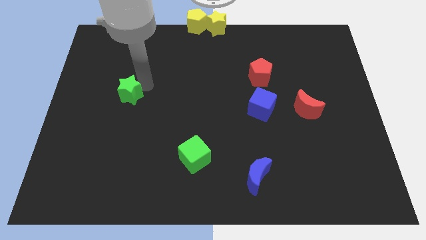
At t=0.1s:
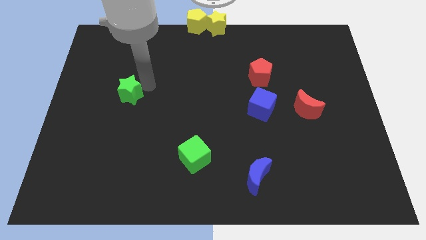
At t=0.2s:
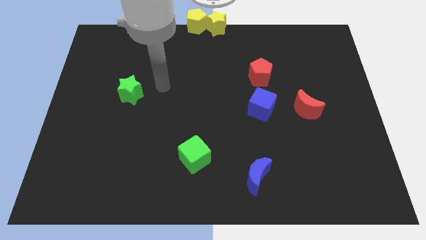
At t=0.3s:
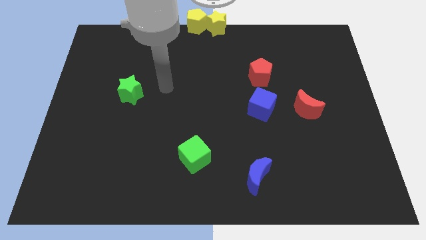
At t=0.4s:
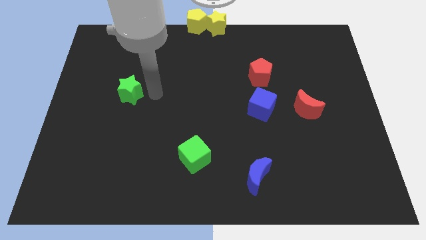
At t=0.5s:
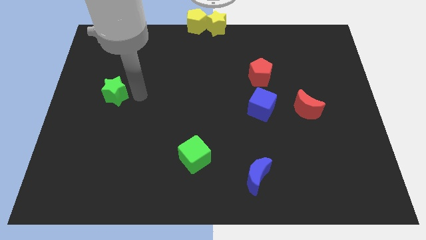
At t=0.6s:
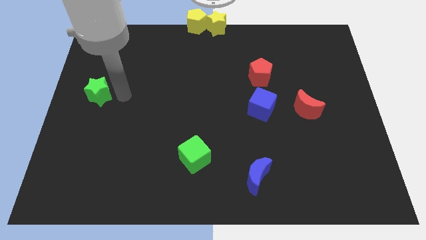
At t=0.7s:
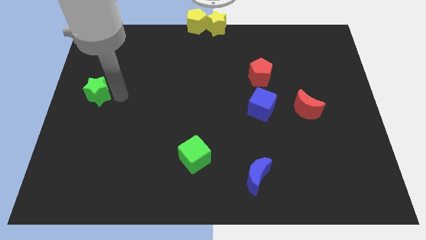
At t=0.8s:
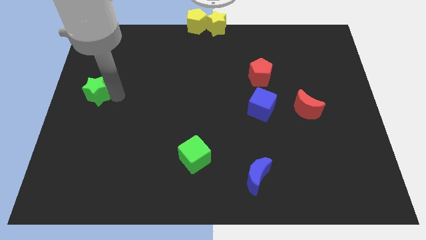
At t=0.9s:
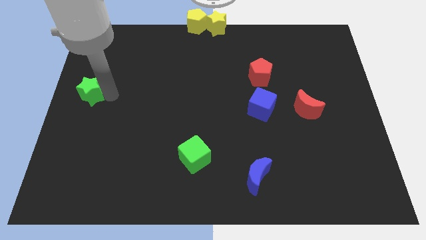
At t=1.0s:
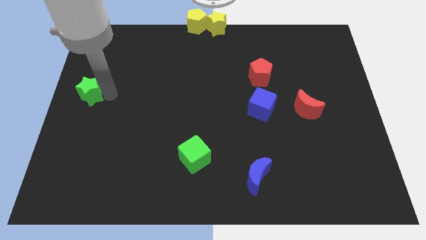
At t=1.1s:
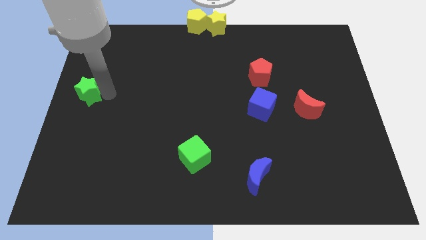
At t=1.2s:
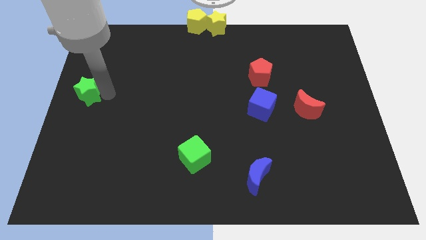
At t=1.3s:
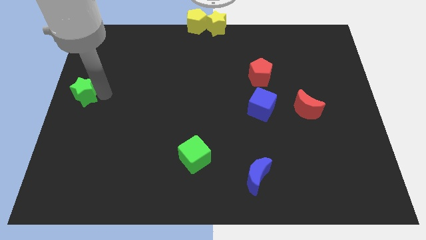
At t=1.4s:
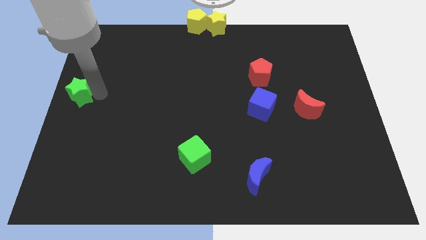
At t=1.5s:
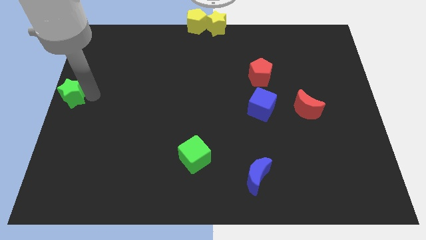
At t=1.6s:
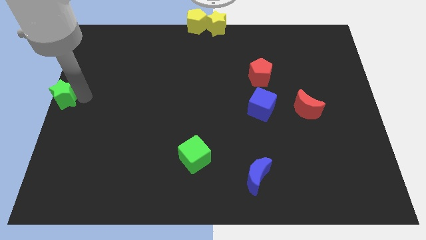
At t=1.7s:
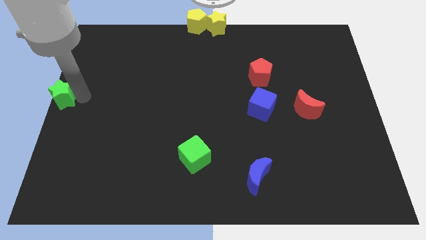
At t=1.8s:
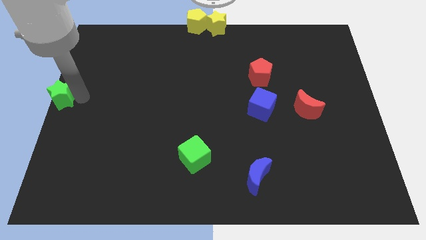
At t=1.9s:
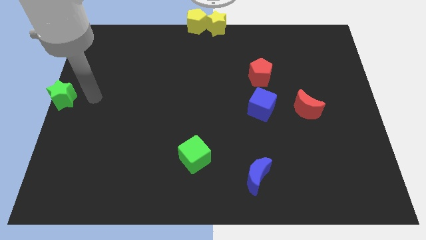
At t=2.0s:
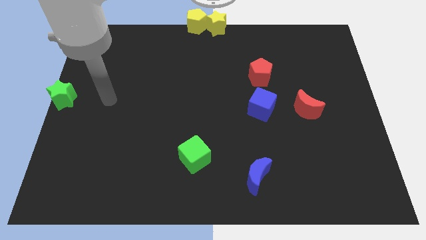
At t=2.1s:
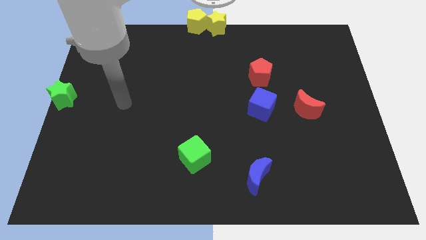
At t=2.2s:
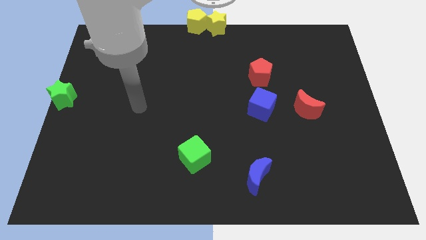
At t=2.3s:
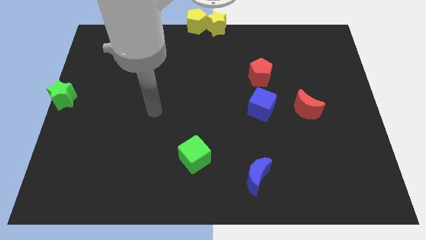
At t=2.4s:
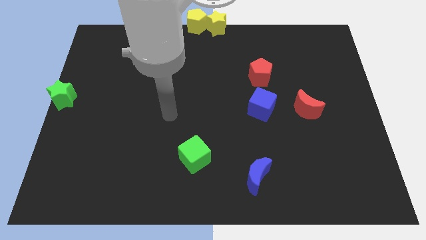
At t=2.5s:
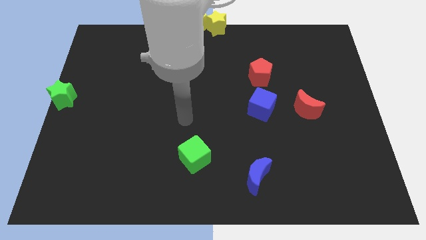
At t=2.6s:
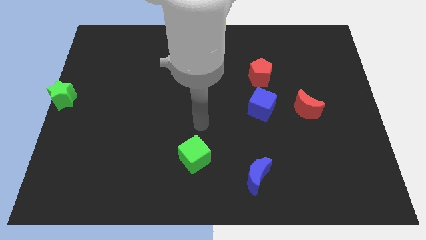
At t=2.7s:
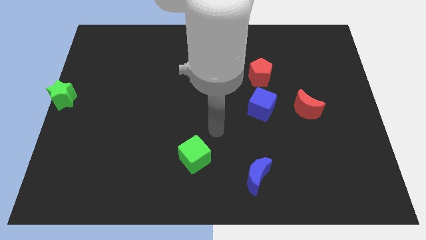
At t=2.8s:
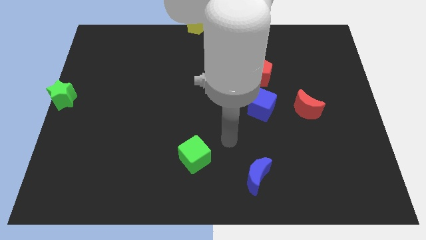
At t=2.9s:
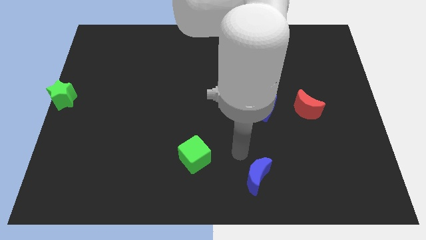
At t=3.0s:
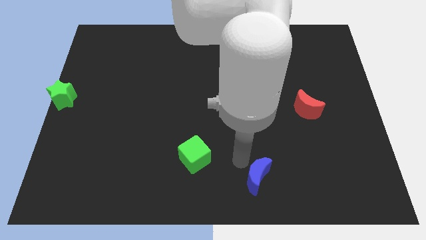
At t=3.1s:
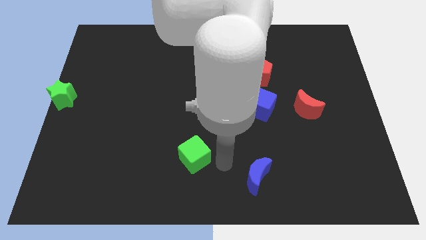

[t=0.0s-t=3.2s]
slide the green star horizontal to the blue cube

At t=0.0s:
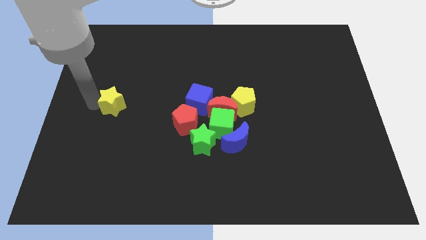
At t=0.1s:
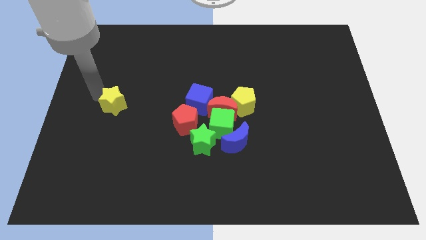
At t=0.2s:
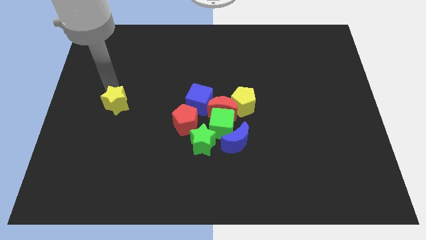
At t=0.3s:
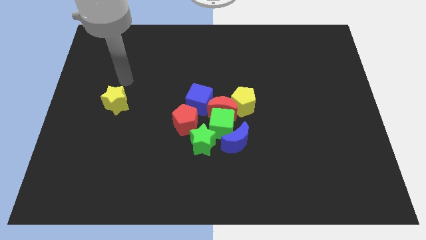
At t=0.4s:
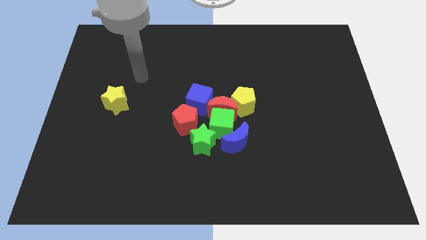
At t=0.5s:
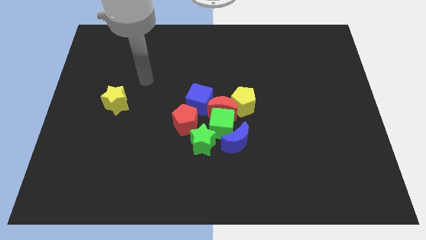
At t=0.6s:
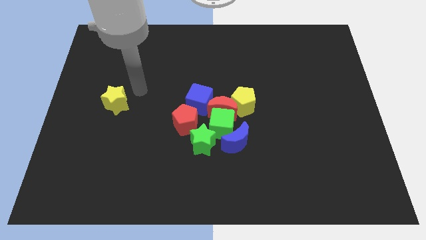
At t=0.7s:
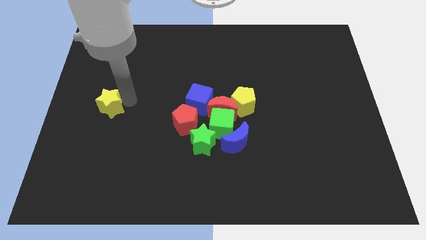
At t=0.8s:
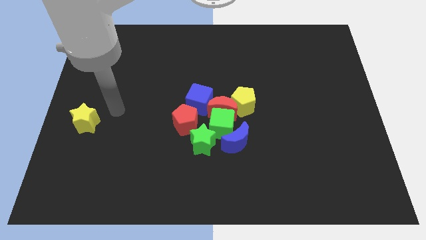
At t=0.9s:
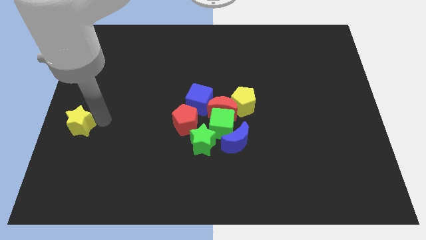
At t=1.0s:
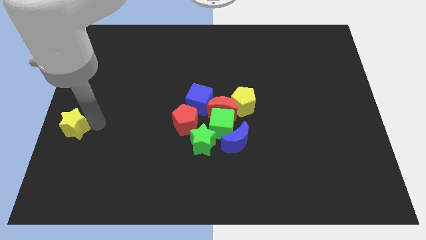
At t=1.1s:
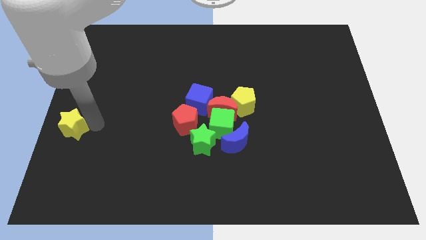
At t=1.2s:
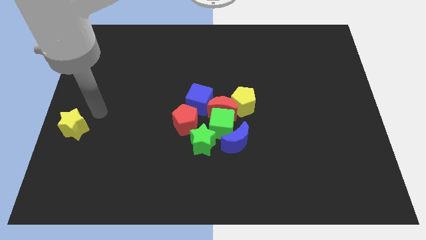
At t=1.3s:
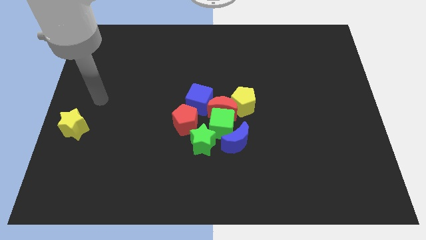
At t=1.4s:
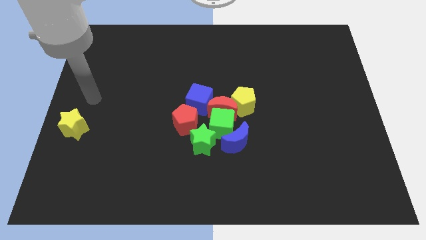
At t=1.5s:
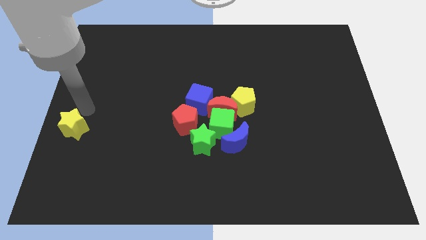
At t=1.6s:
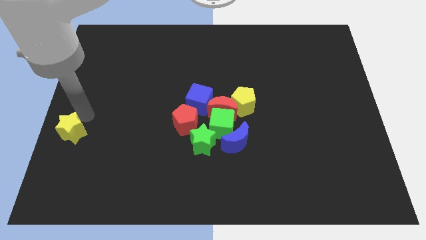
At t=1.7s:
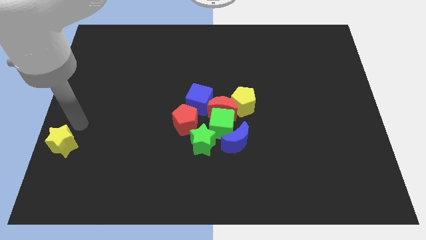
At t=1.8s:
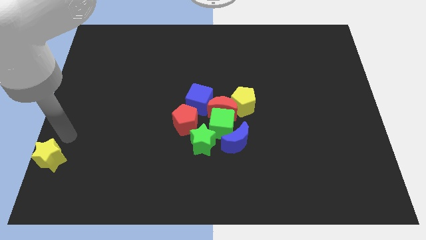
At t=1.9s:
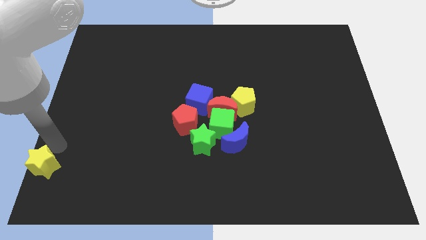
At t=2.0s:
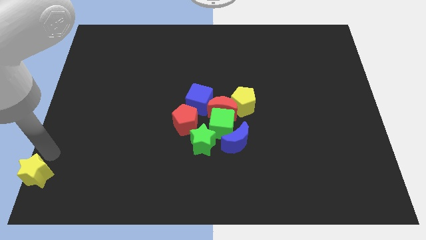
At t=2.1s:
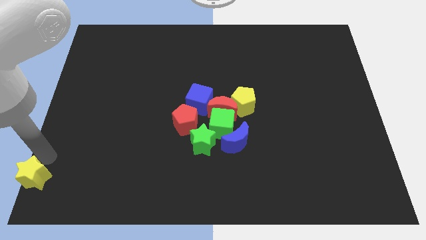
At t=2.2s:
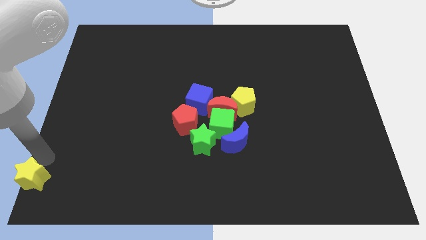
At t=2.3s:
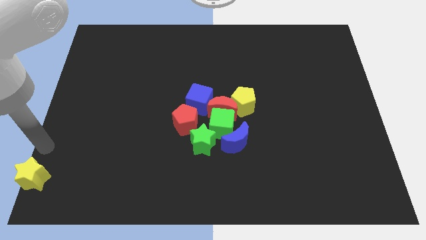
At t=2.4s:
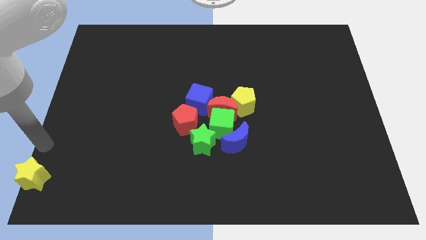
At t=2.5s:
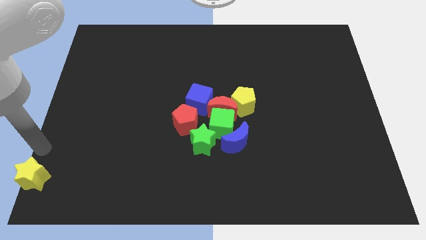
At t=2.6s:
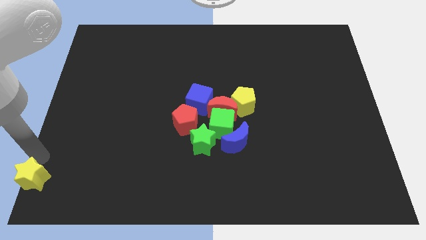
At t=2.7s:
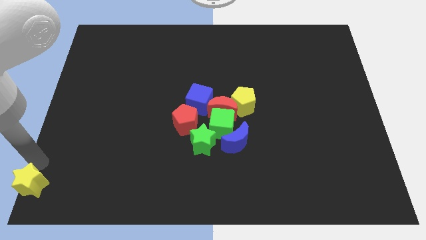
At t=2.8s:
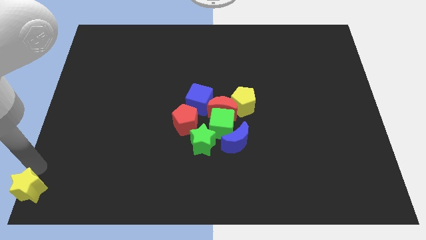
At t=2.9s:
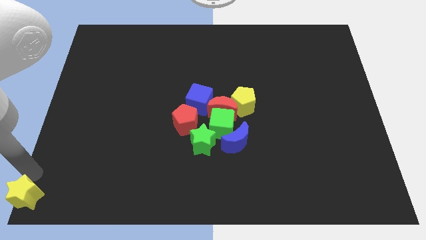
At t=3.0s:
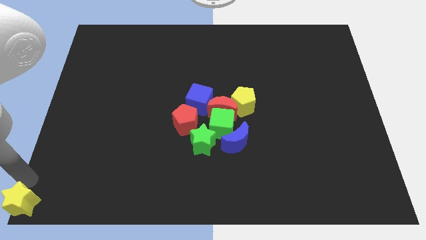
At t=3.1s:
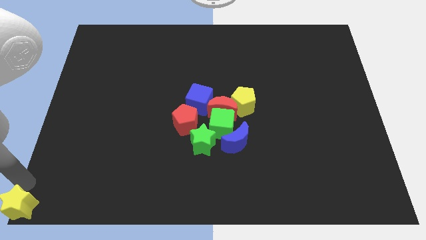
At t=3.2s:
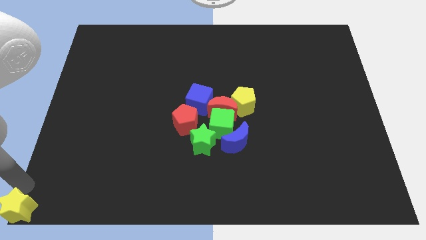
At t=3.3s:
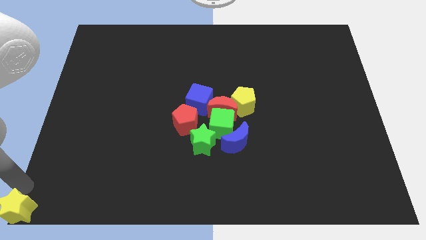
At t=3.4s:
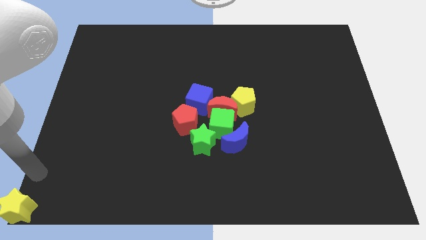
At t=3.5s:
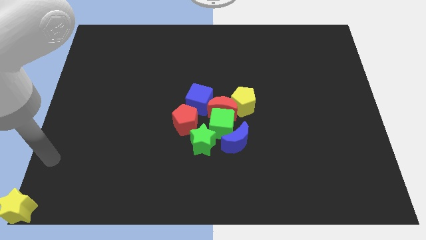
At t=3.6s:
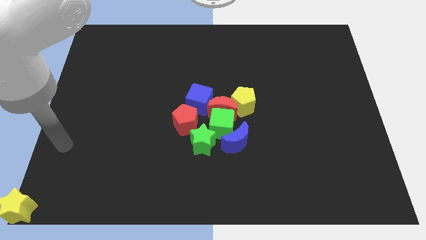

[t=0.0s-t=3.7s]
move the yellow star to the bottom left corner of the board

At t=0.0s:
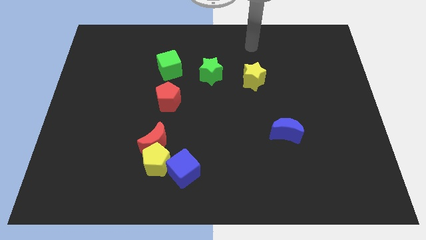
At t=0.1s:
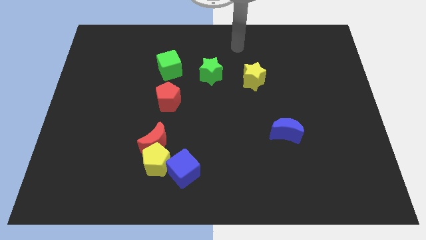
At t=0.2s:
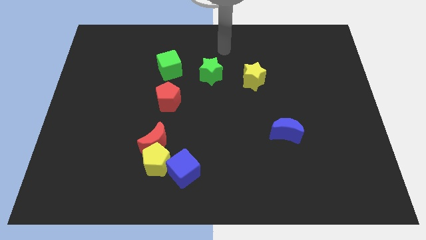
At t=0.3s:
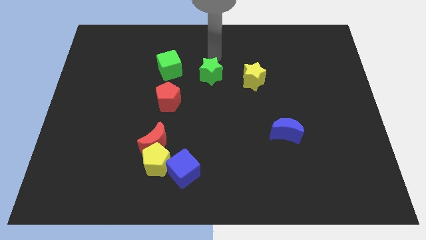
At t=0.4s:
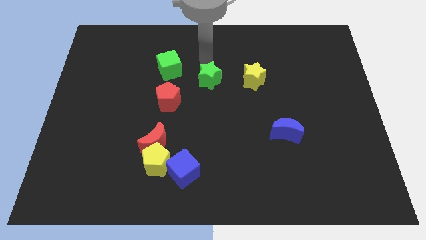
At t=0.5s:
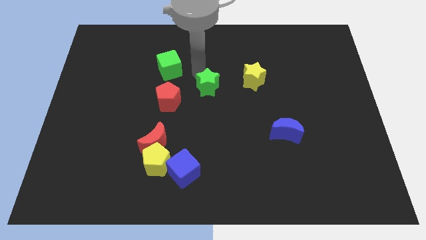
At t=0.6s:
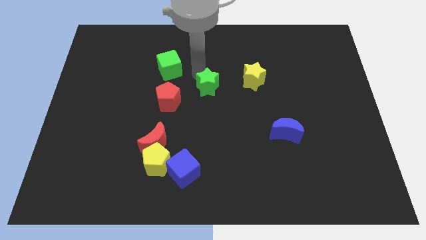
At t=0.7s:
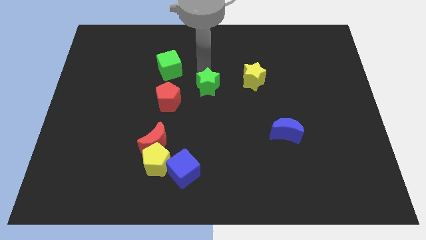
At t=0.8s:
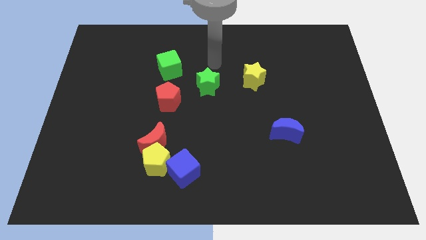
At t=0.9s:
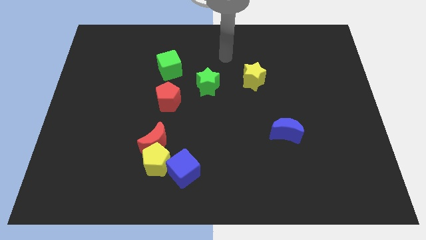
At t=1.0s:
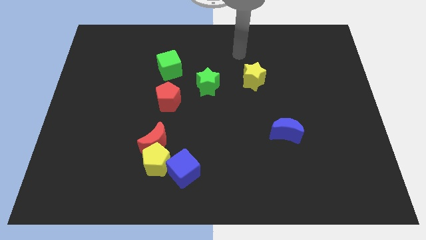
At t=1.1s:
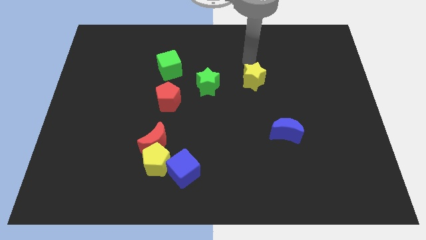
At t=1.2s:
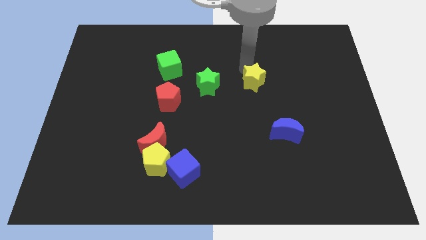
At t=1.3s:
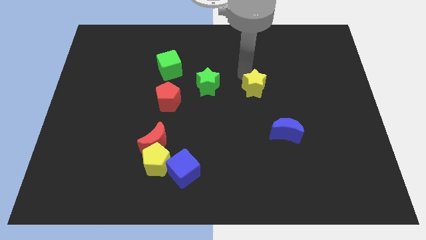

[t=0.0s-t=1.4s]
push the green star and yellow star downwards

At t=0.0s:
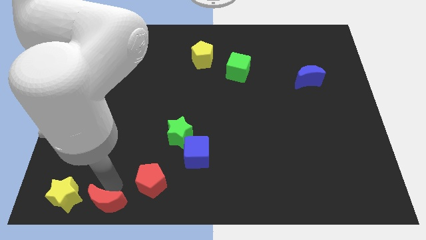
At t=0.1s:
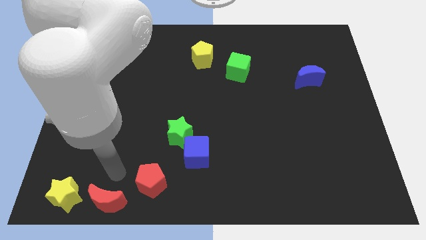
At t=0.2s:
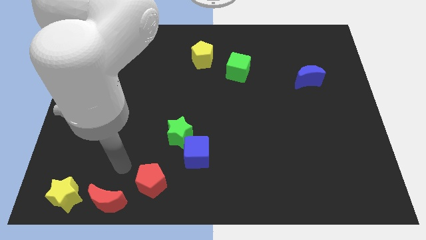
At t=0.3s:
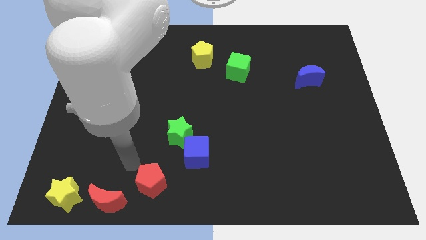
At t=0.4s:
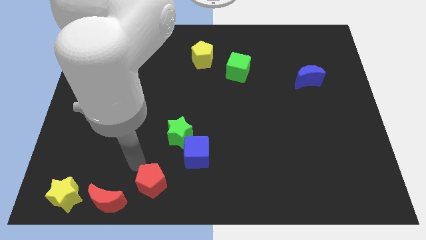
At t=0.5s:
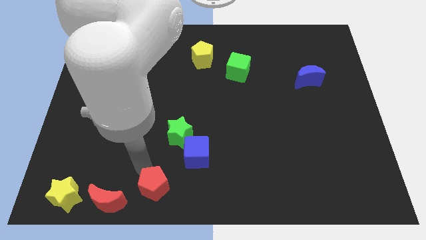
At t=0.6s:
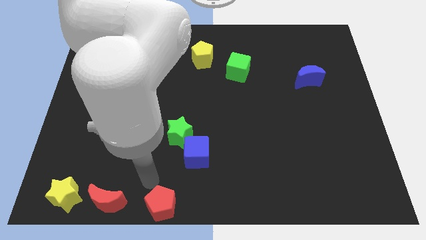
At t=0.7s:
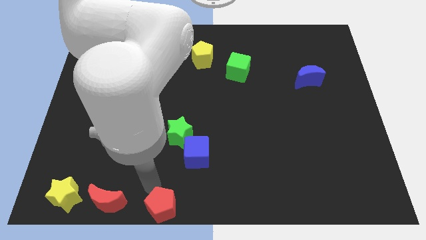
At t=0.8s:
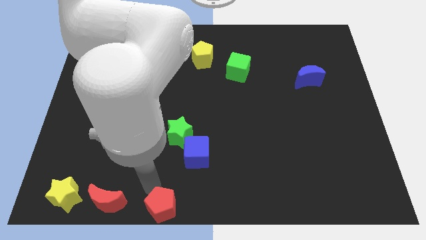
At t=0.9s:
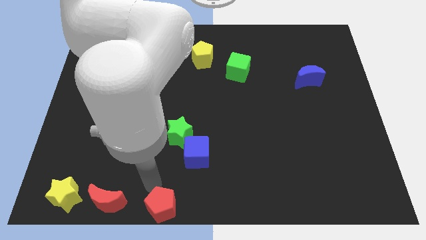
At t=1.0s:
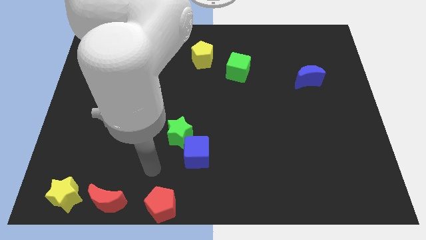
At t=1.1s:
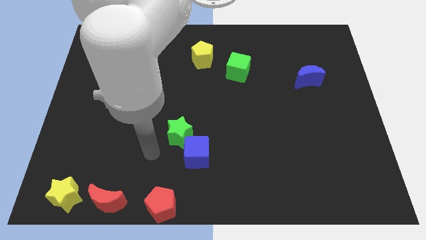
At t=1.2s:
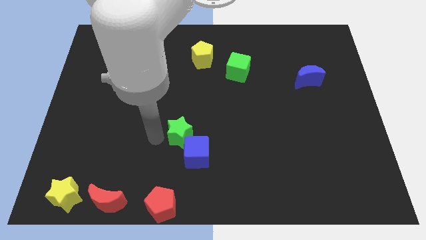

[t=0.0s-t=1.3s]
place the red pentagon to the right of the red moon
